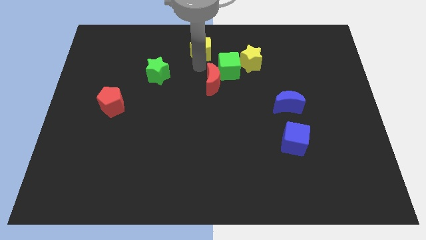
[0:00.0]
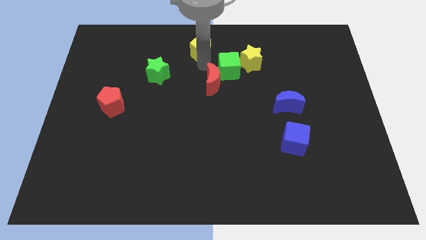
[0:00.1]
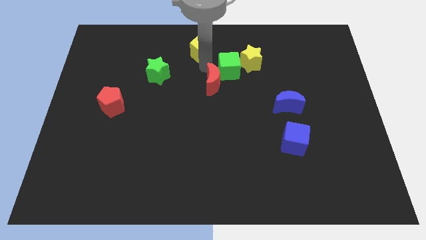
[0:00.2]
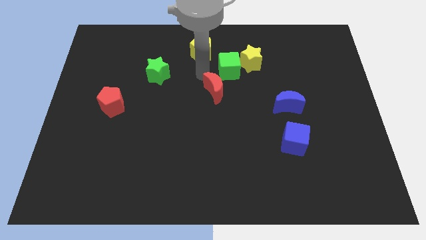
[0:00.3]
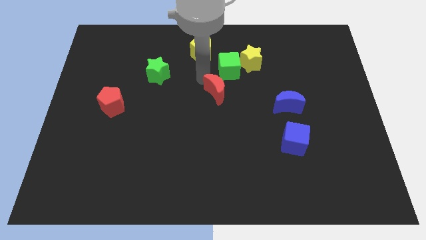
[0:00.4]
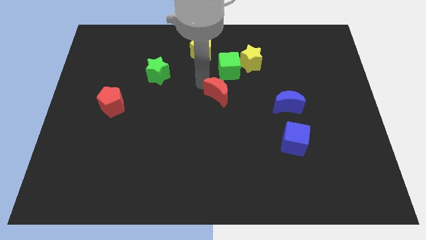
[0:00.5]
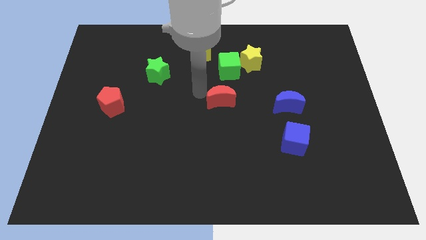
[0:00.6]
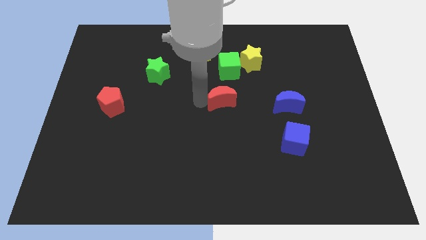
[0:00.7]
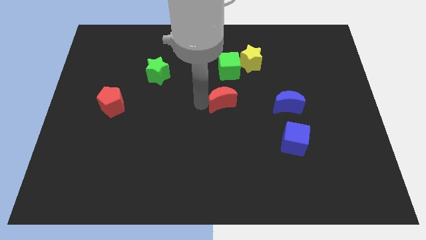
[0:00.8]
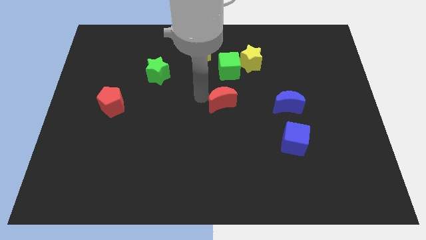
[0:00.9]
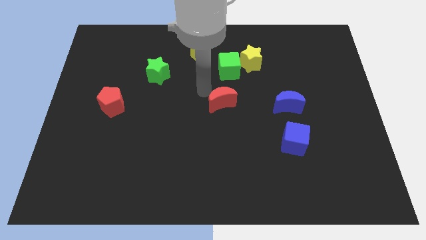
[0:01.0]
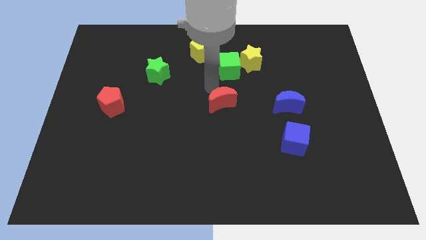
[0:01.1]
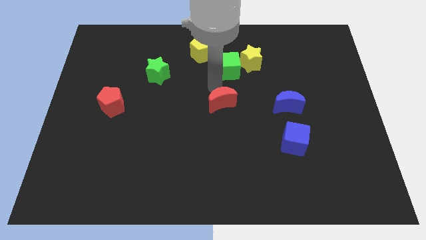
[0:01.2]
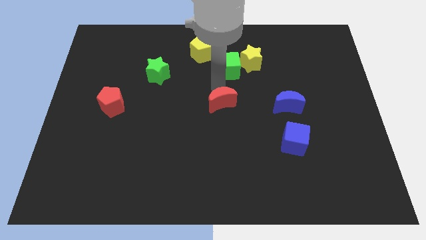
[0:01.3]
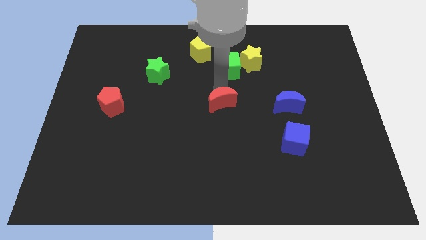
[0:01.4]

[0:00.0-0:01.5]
push the red crescent to the bottom of the green cube

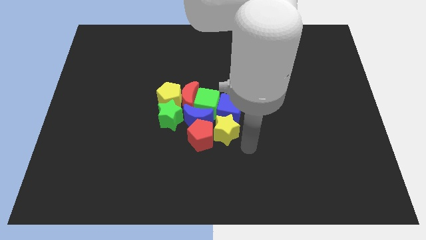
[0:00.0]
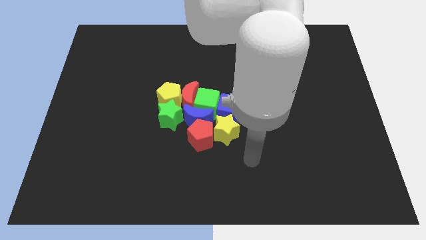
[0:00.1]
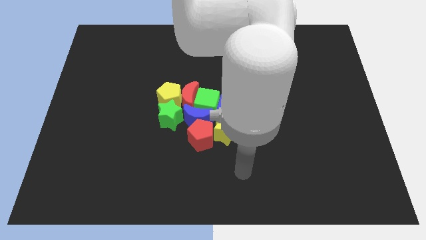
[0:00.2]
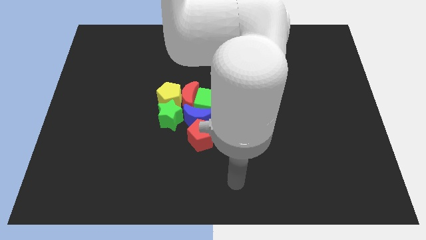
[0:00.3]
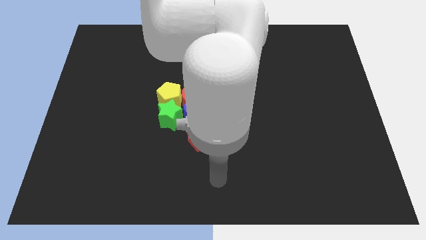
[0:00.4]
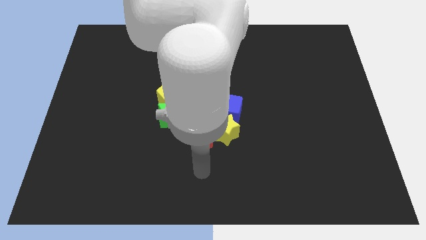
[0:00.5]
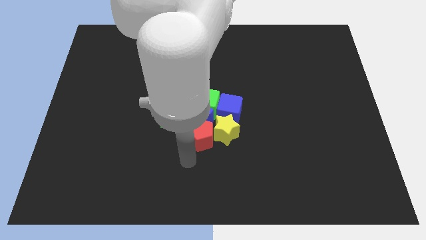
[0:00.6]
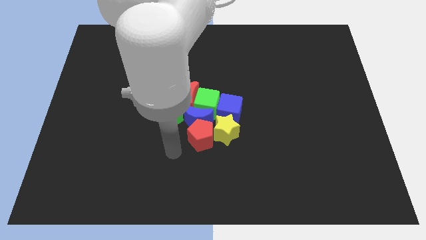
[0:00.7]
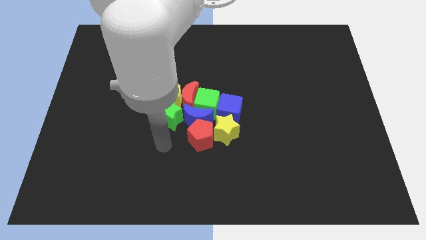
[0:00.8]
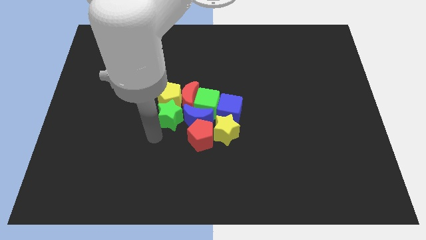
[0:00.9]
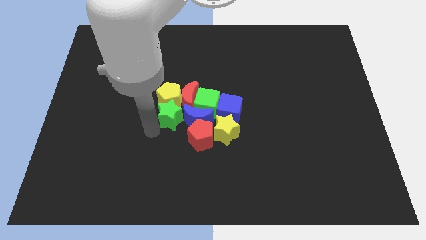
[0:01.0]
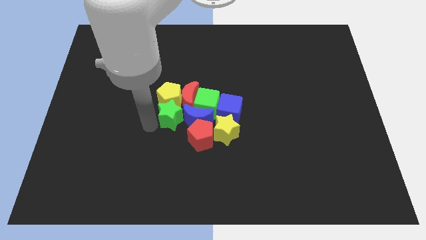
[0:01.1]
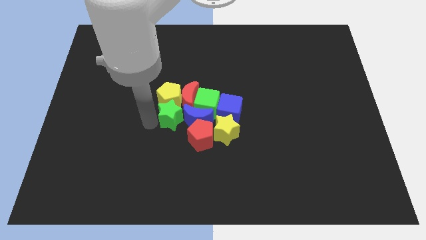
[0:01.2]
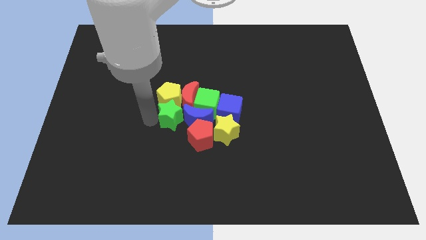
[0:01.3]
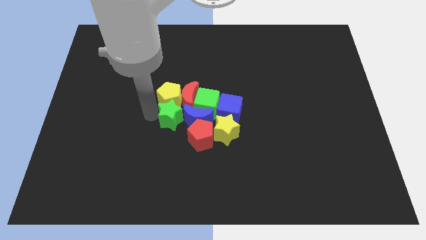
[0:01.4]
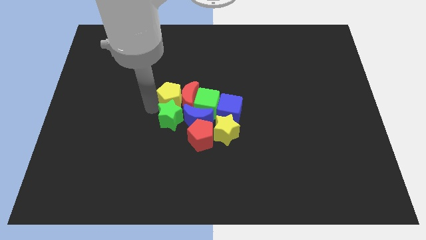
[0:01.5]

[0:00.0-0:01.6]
move your arm towards the bottom left side of the yellow pentagon

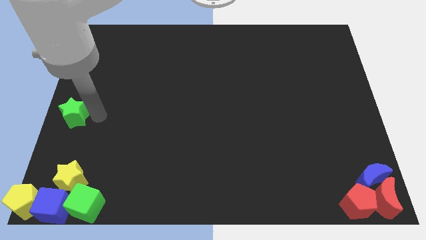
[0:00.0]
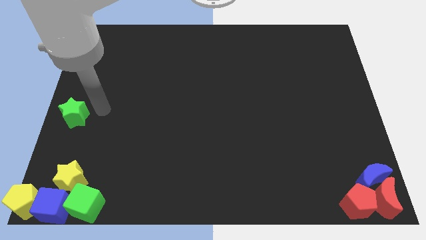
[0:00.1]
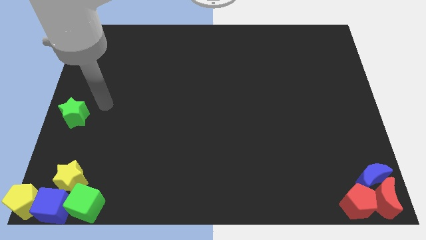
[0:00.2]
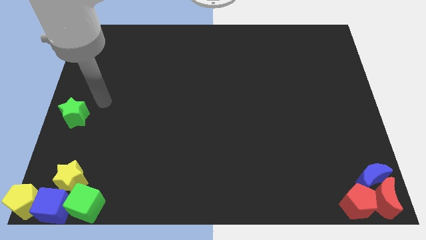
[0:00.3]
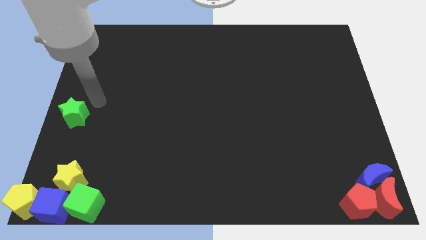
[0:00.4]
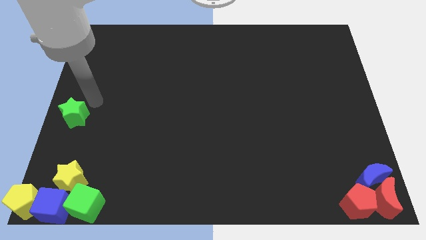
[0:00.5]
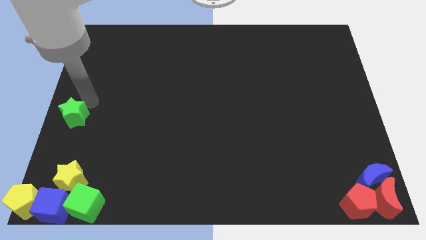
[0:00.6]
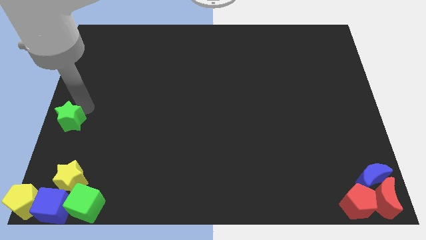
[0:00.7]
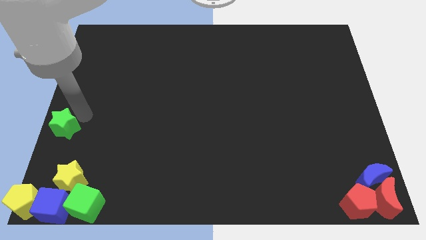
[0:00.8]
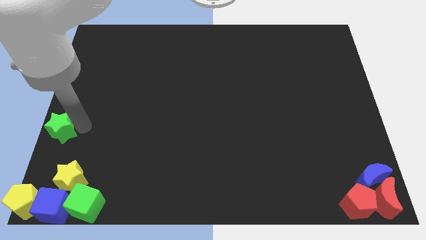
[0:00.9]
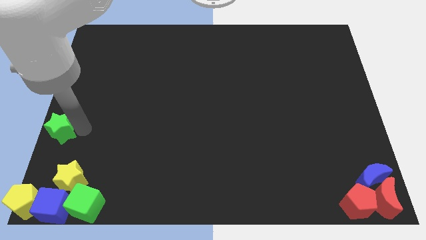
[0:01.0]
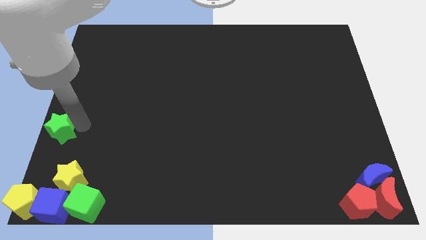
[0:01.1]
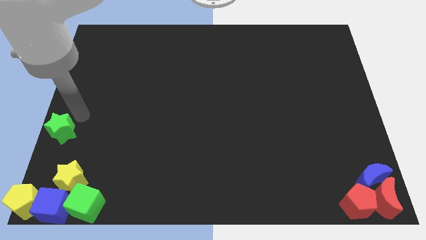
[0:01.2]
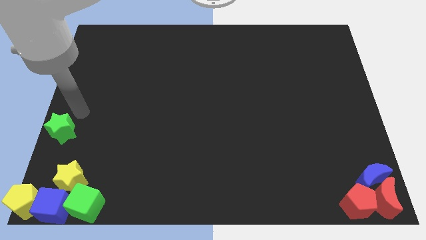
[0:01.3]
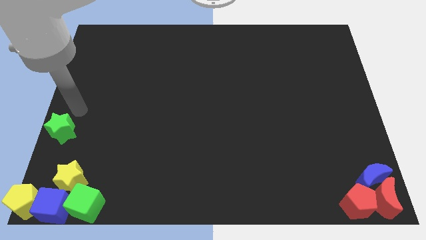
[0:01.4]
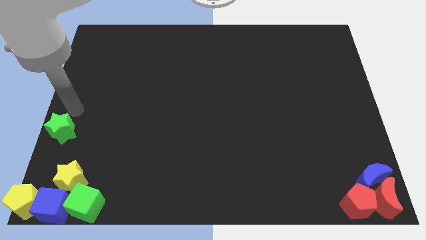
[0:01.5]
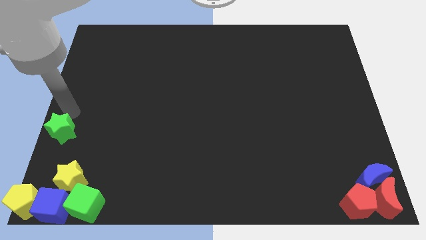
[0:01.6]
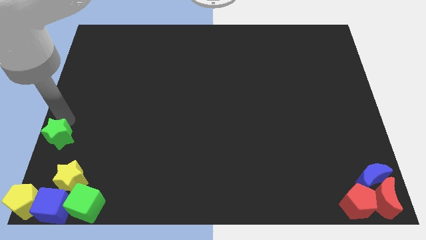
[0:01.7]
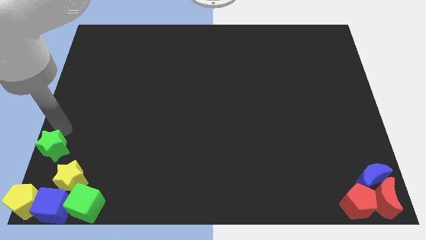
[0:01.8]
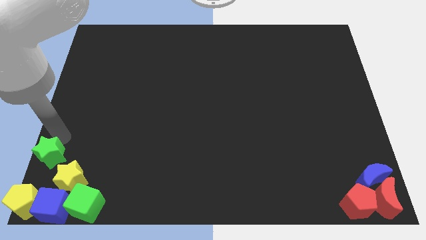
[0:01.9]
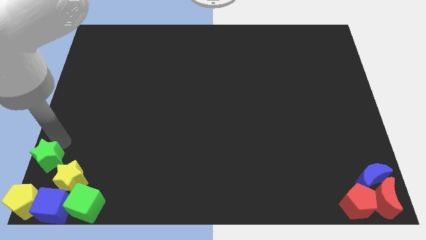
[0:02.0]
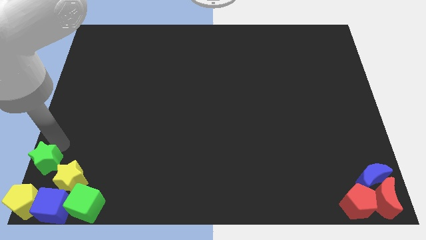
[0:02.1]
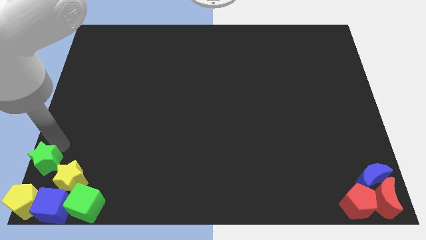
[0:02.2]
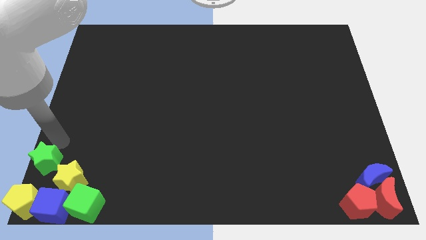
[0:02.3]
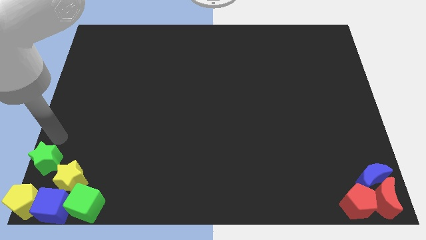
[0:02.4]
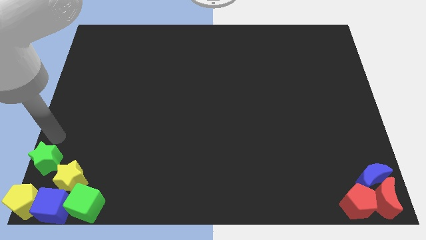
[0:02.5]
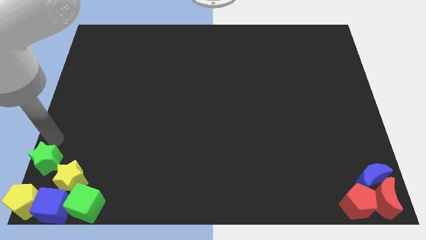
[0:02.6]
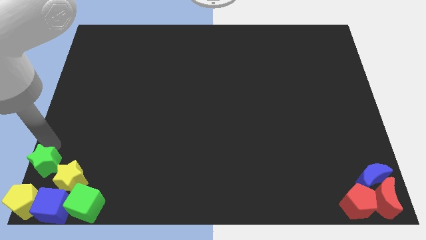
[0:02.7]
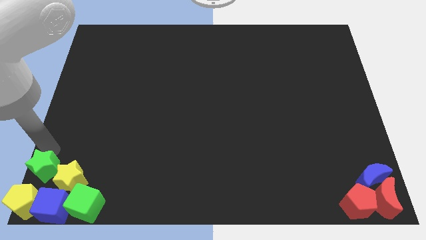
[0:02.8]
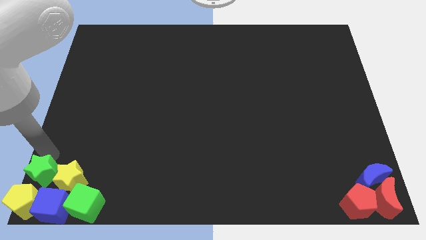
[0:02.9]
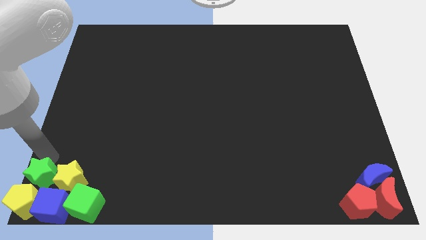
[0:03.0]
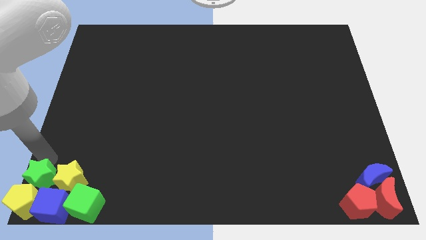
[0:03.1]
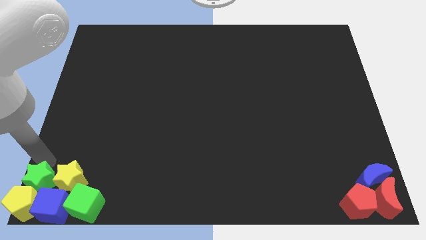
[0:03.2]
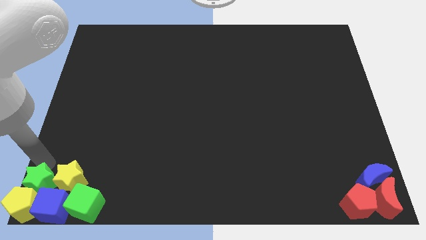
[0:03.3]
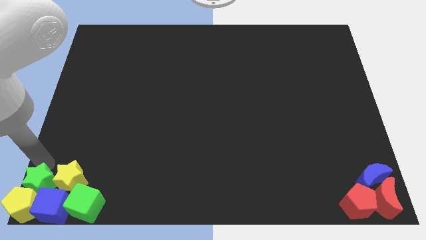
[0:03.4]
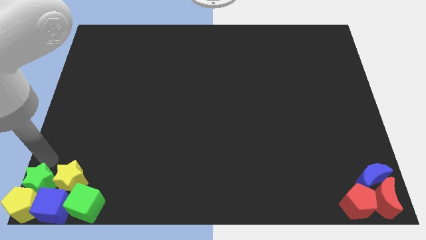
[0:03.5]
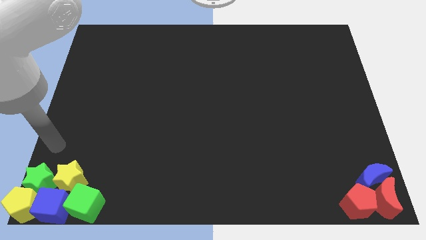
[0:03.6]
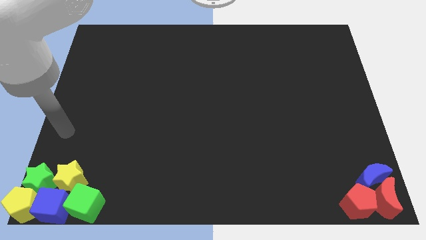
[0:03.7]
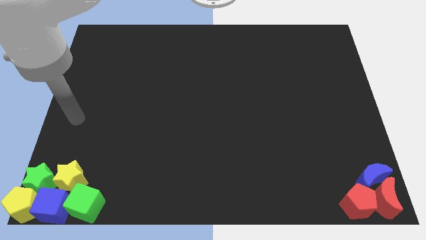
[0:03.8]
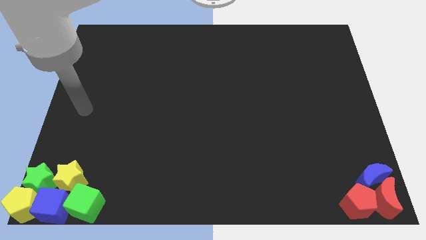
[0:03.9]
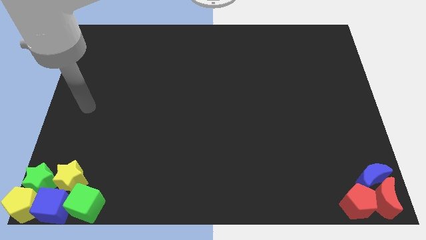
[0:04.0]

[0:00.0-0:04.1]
push green star into group of blocks at bottom left corner of the board

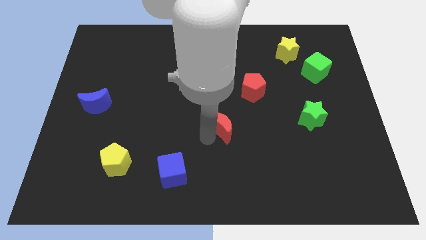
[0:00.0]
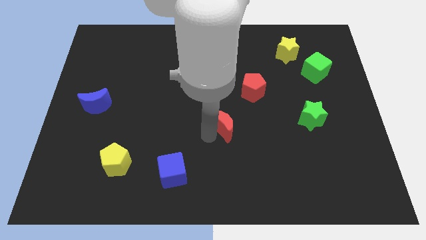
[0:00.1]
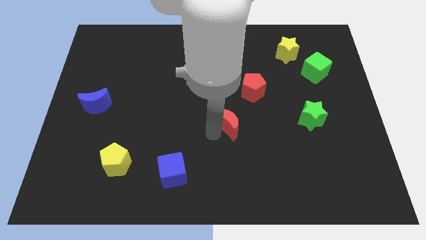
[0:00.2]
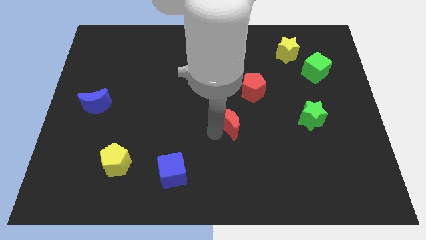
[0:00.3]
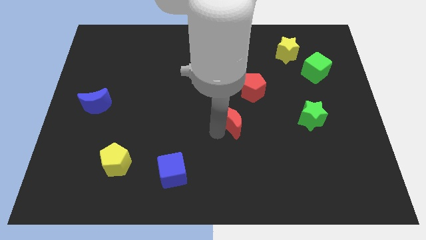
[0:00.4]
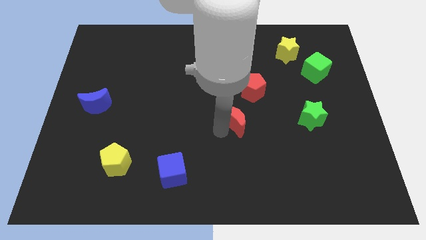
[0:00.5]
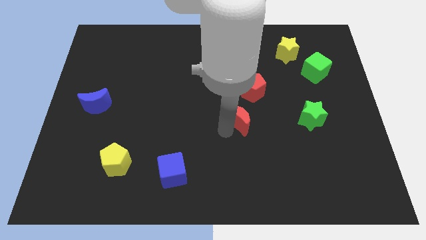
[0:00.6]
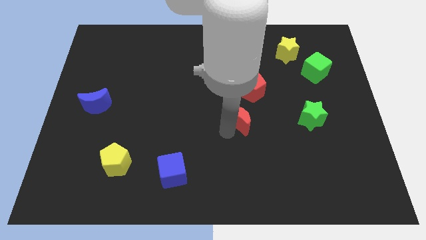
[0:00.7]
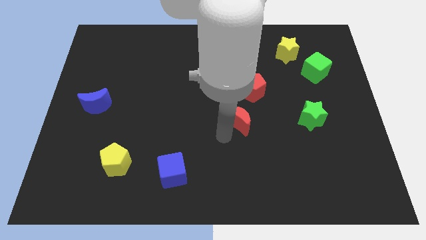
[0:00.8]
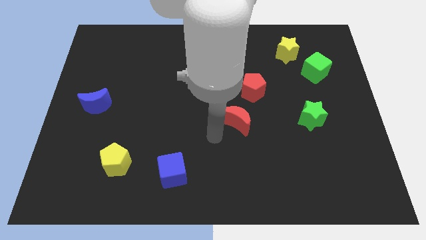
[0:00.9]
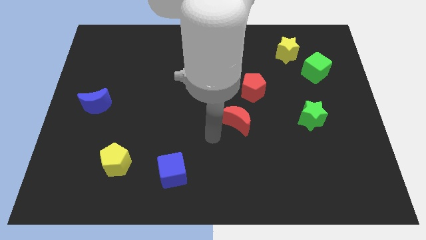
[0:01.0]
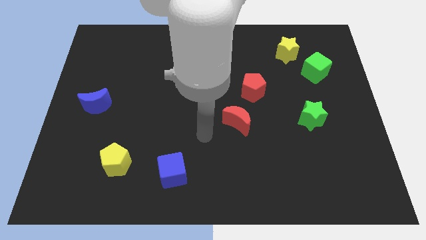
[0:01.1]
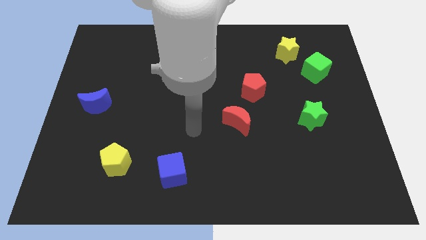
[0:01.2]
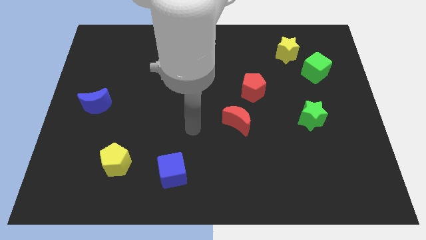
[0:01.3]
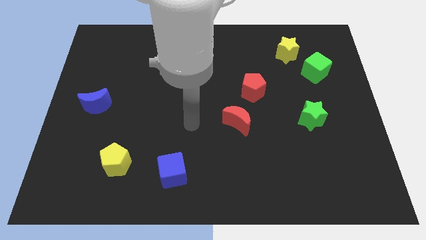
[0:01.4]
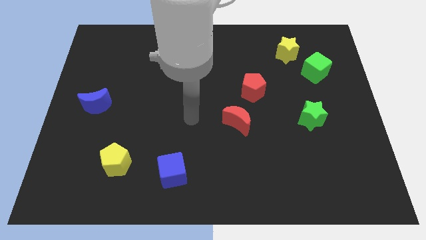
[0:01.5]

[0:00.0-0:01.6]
move the red crescent diagonally on the bottom left side of the red pentagon

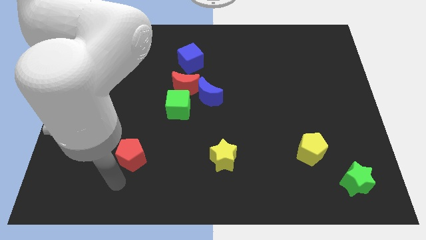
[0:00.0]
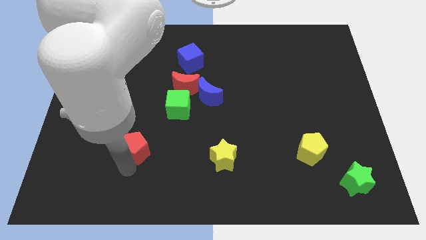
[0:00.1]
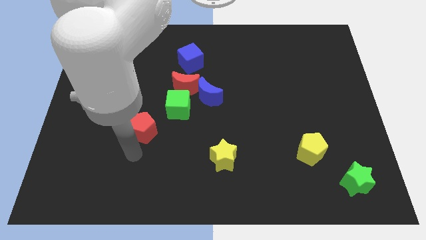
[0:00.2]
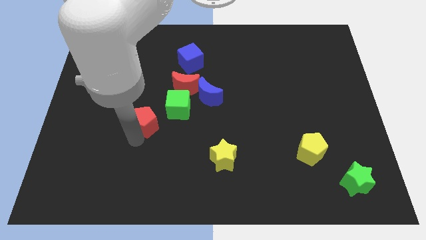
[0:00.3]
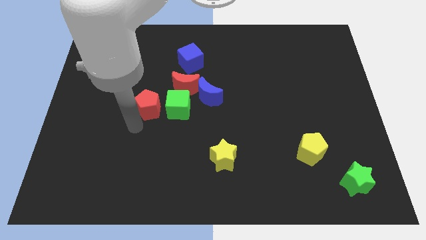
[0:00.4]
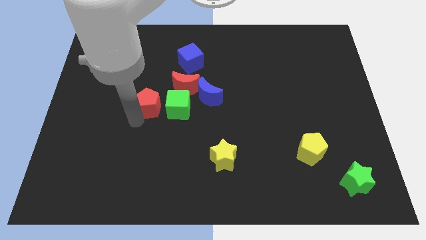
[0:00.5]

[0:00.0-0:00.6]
move the red pentagon to the left of the green cube
